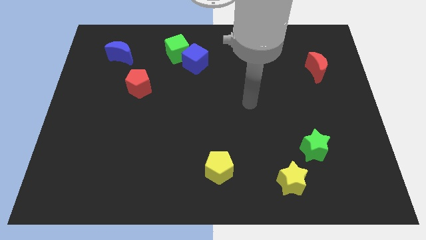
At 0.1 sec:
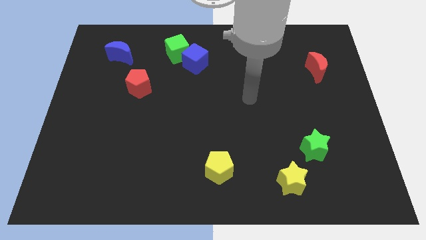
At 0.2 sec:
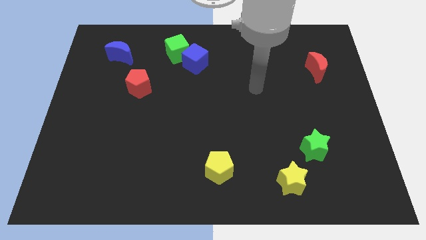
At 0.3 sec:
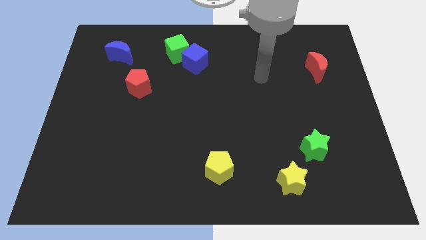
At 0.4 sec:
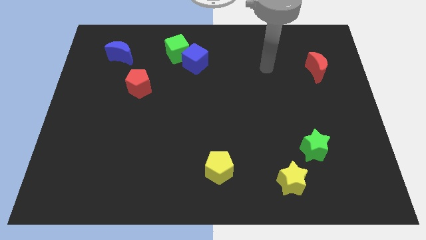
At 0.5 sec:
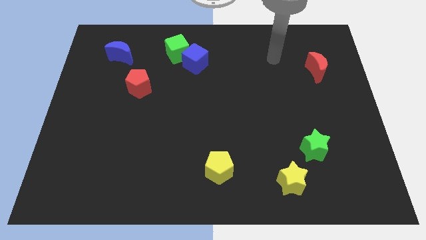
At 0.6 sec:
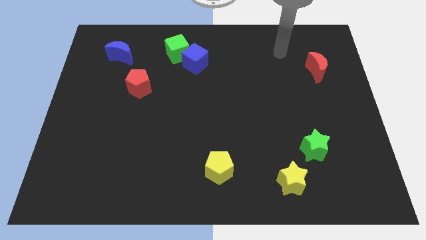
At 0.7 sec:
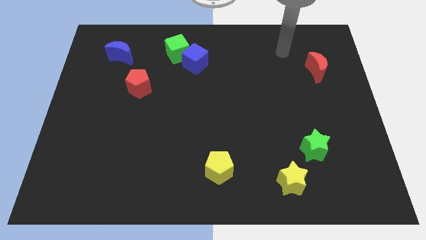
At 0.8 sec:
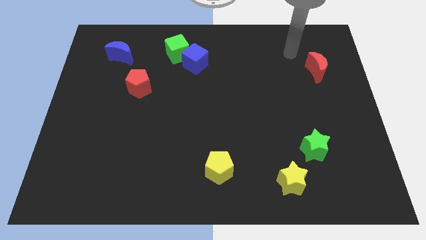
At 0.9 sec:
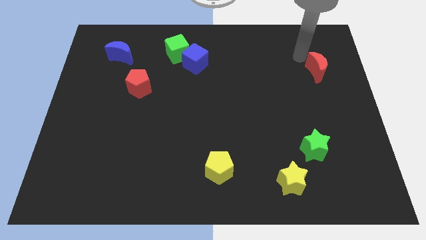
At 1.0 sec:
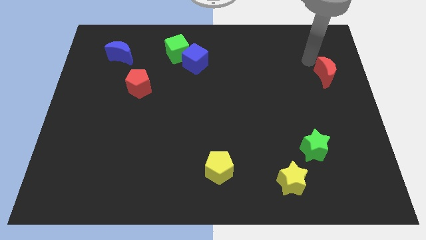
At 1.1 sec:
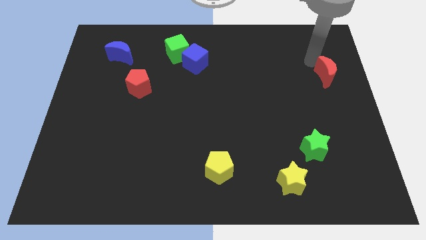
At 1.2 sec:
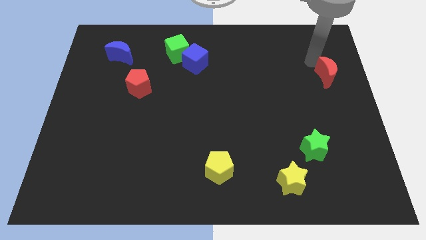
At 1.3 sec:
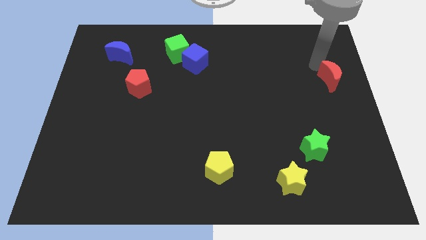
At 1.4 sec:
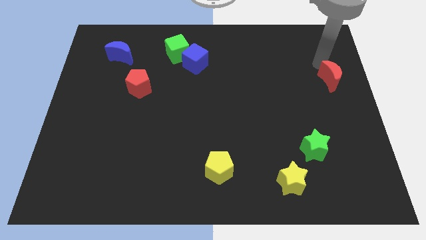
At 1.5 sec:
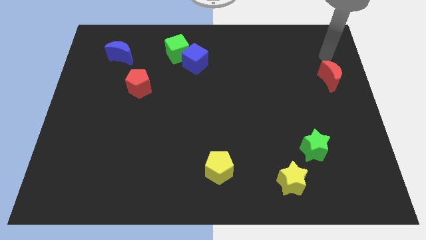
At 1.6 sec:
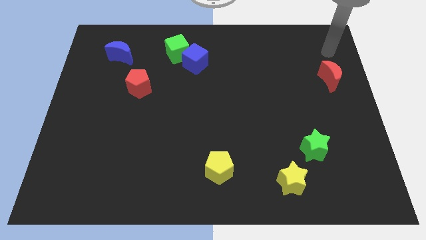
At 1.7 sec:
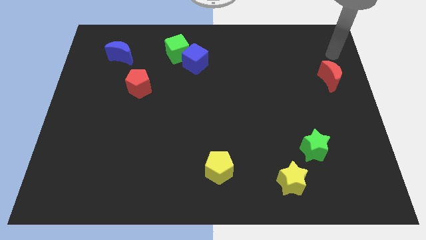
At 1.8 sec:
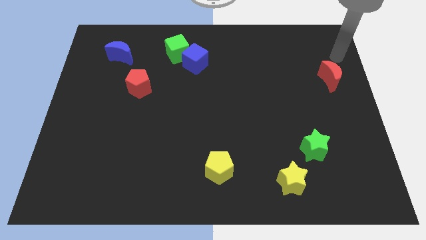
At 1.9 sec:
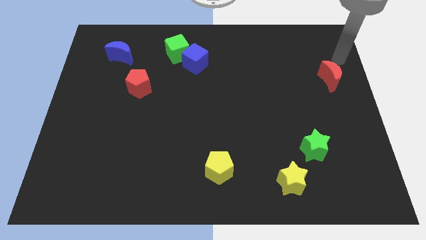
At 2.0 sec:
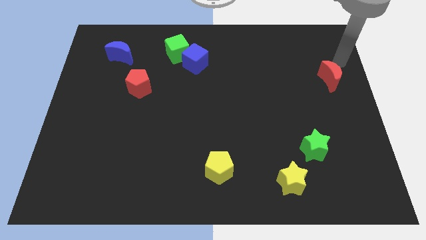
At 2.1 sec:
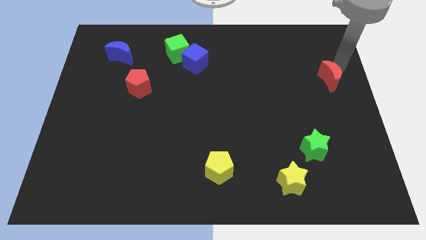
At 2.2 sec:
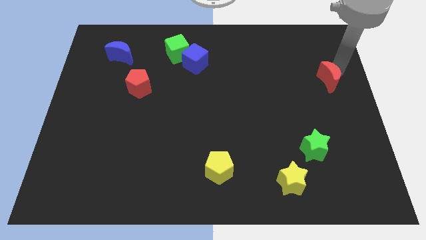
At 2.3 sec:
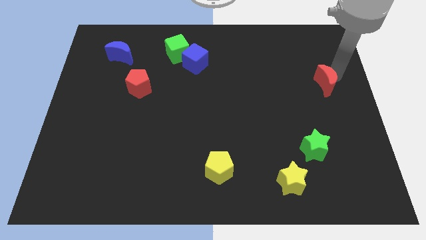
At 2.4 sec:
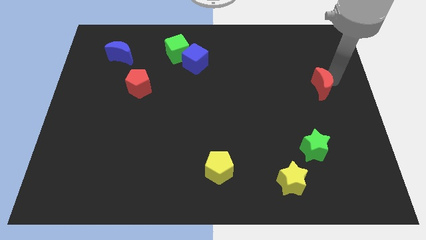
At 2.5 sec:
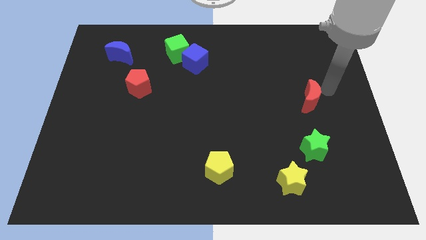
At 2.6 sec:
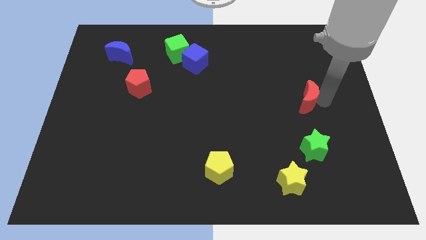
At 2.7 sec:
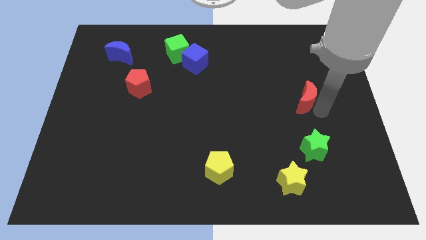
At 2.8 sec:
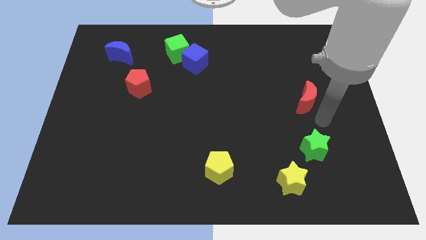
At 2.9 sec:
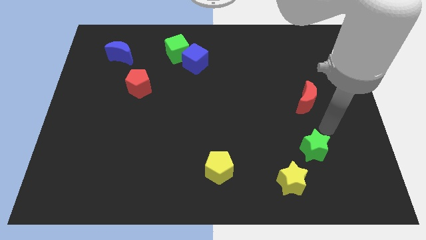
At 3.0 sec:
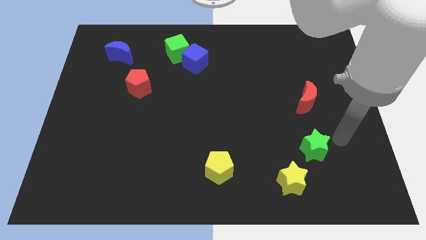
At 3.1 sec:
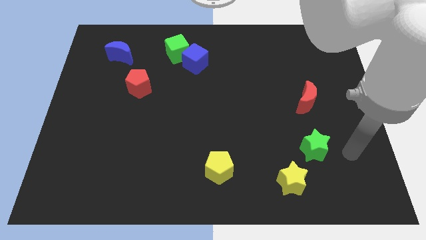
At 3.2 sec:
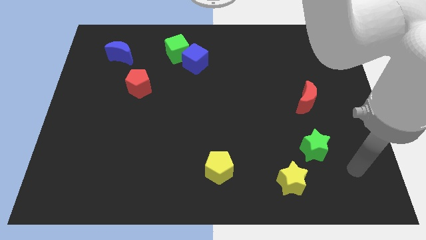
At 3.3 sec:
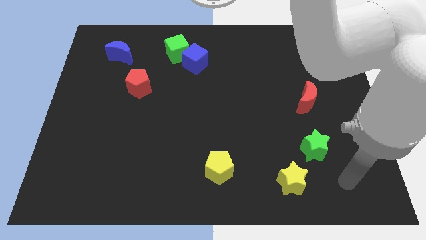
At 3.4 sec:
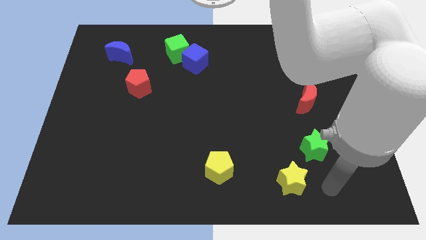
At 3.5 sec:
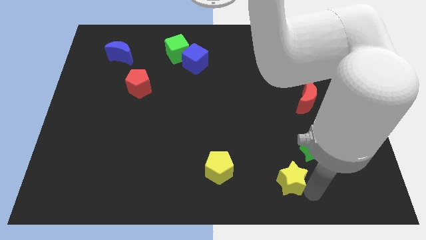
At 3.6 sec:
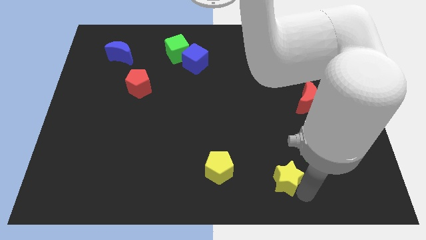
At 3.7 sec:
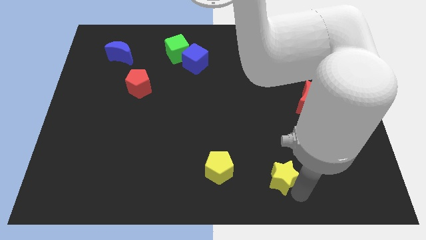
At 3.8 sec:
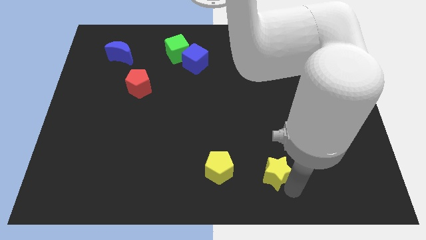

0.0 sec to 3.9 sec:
point your arm below yellow star

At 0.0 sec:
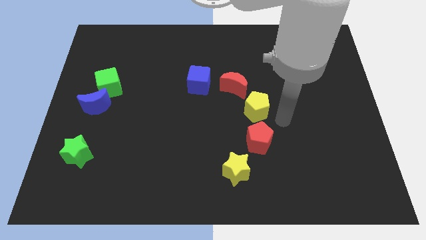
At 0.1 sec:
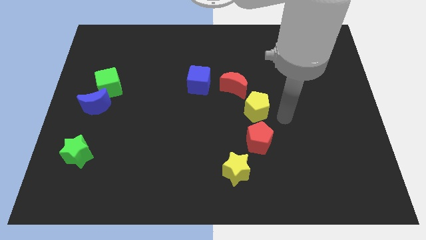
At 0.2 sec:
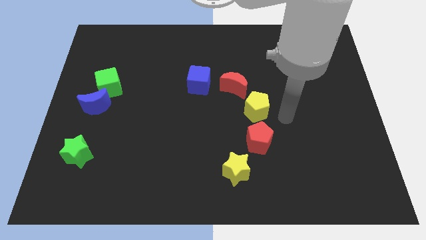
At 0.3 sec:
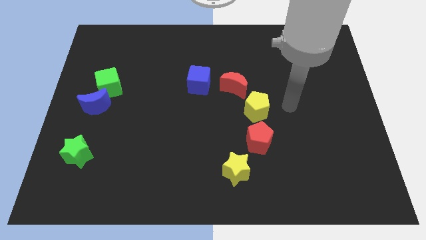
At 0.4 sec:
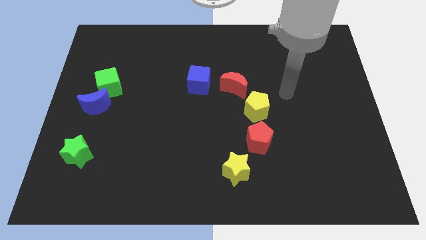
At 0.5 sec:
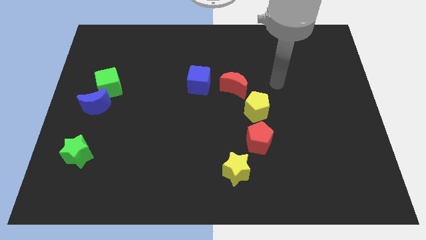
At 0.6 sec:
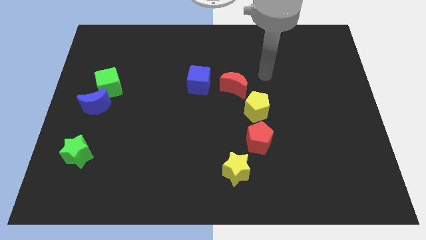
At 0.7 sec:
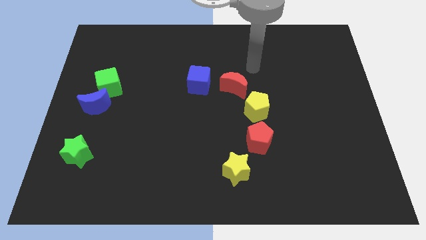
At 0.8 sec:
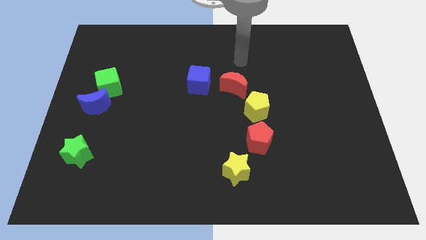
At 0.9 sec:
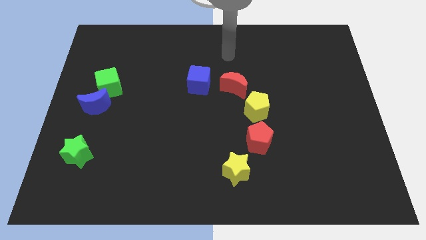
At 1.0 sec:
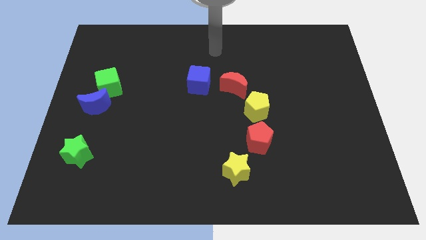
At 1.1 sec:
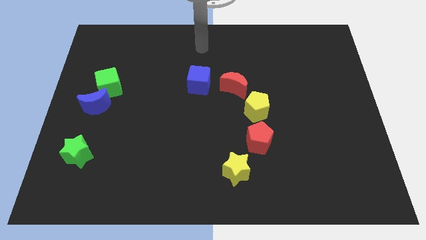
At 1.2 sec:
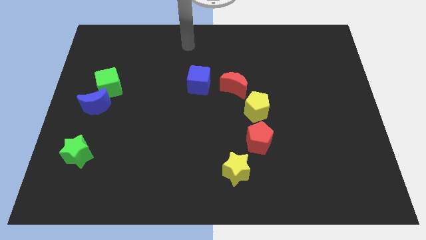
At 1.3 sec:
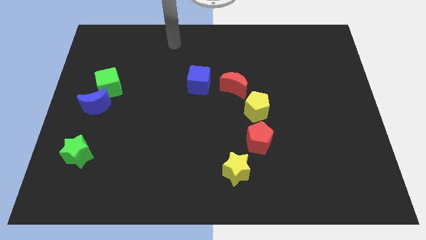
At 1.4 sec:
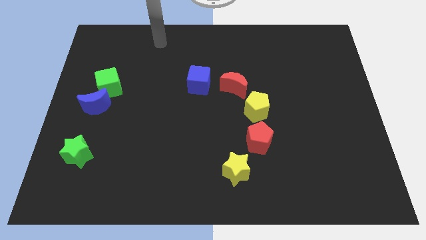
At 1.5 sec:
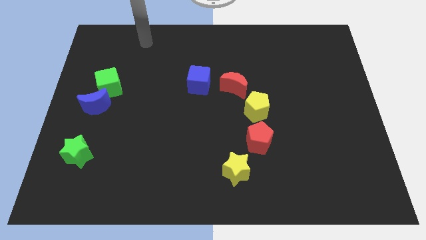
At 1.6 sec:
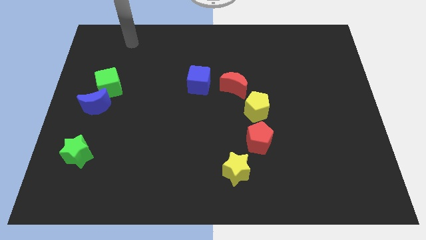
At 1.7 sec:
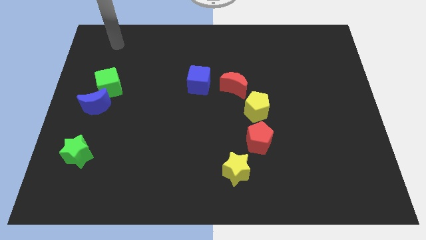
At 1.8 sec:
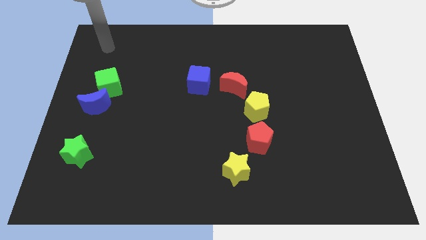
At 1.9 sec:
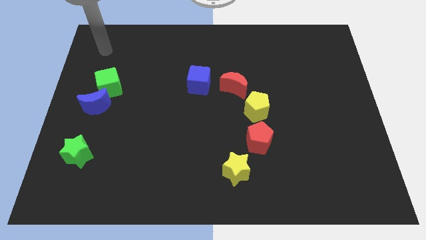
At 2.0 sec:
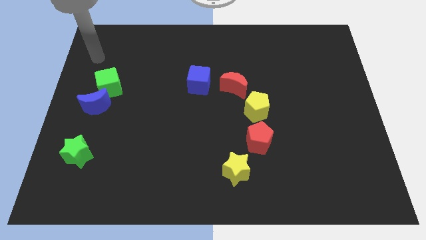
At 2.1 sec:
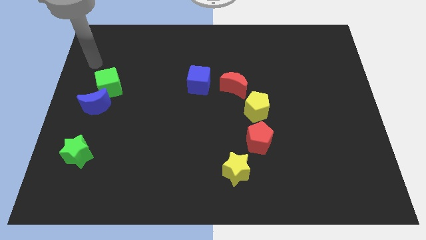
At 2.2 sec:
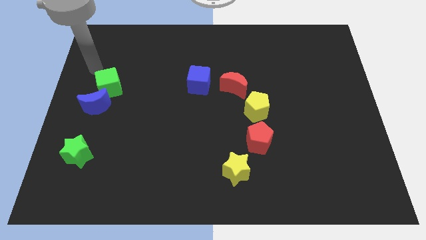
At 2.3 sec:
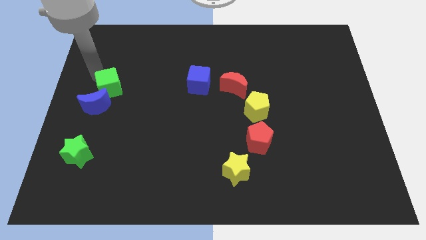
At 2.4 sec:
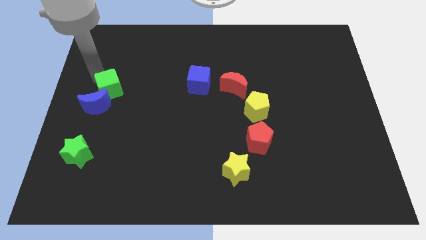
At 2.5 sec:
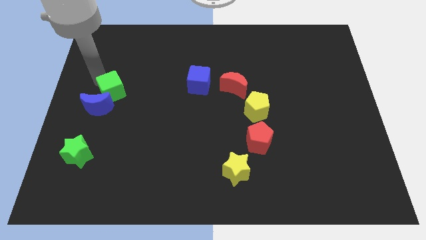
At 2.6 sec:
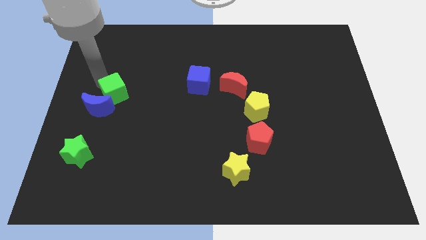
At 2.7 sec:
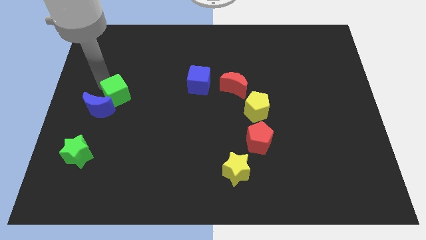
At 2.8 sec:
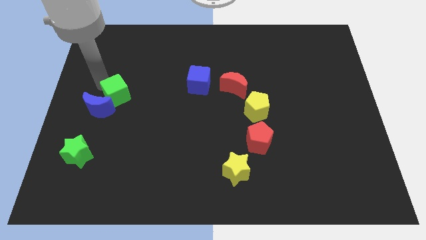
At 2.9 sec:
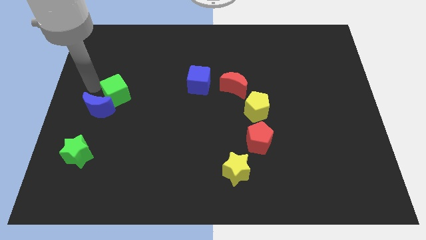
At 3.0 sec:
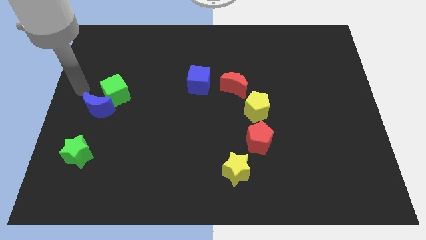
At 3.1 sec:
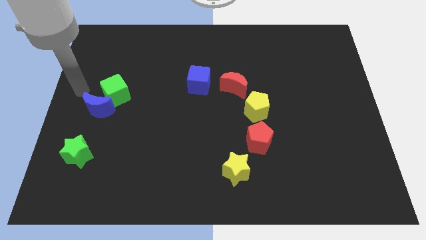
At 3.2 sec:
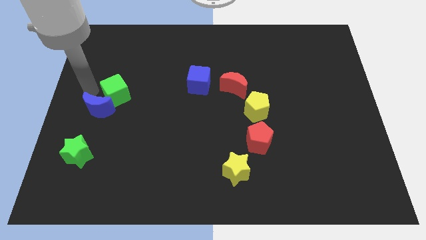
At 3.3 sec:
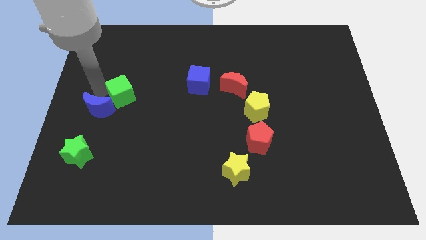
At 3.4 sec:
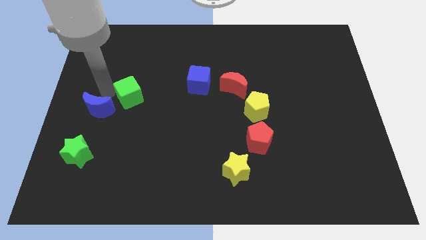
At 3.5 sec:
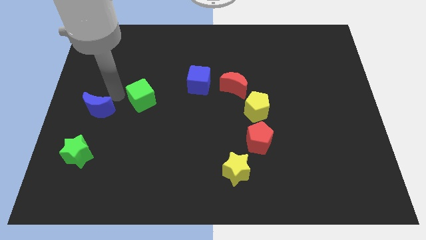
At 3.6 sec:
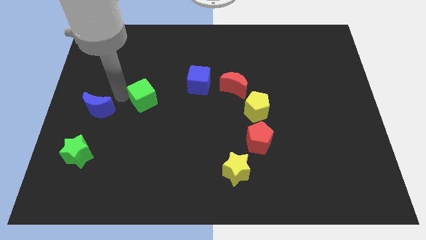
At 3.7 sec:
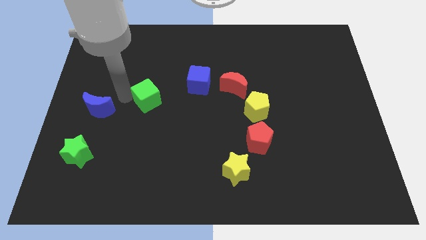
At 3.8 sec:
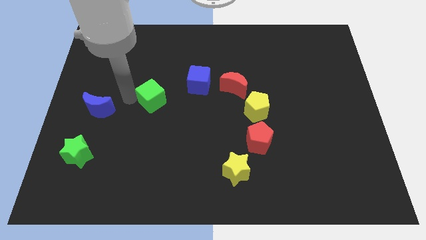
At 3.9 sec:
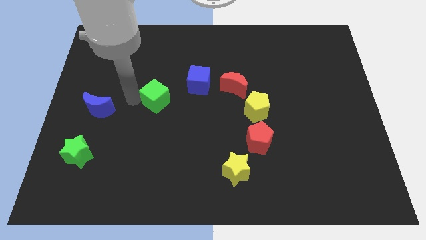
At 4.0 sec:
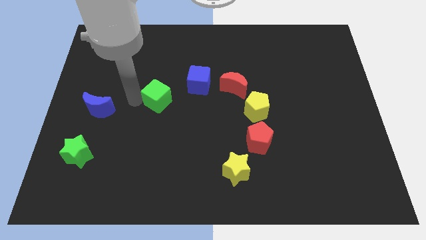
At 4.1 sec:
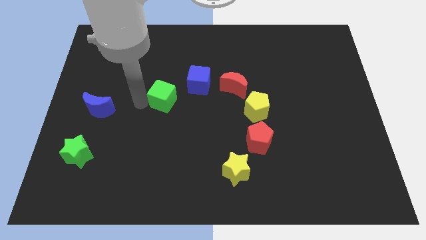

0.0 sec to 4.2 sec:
separate the green cube from blue moon

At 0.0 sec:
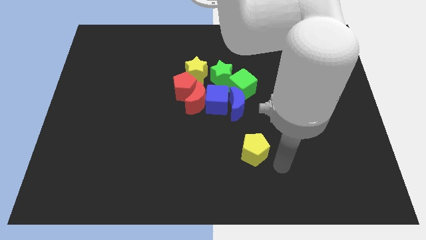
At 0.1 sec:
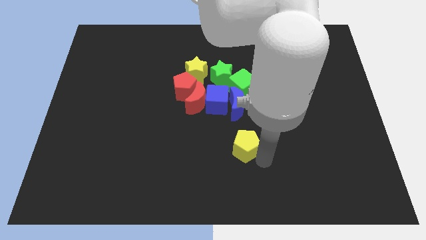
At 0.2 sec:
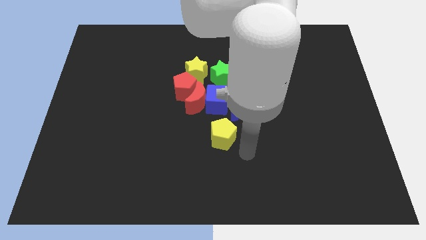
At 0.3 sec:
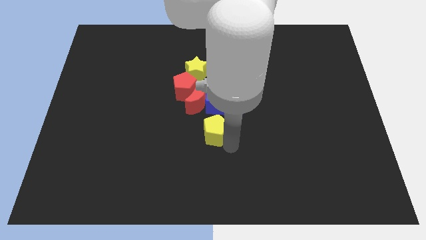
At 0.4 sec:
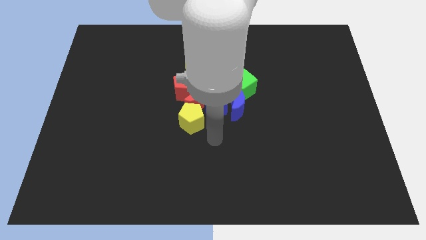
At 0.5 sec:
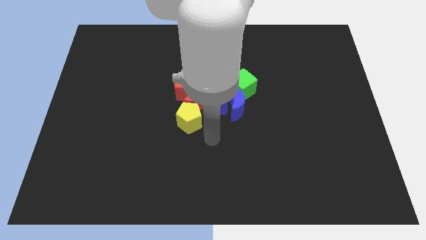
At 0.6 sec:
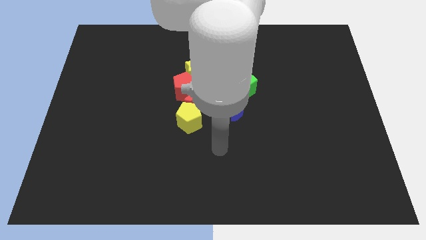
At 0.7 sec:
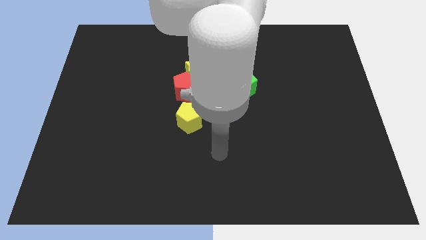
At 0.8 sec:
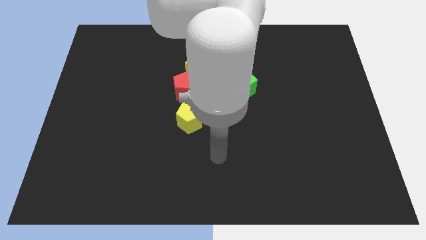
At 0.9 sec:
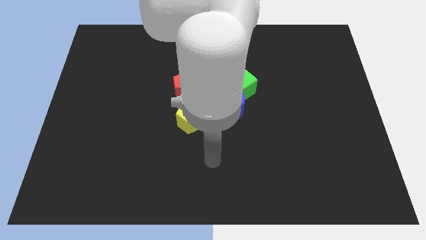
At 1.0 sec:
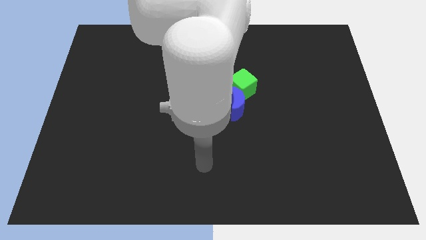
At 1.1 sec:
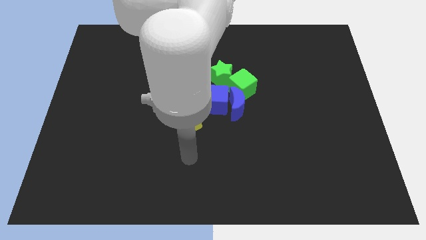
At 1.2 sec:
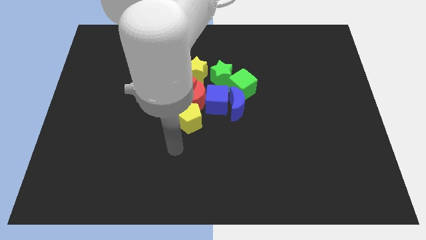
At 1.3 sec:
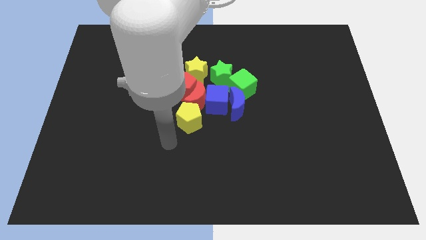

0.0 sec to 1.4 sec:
move the yellow pentagon to the bottom of the red crescent
